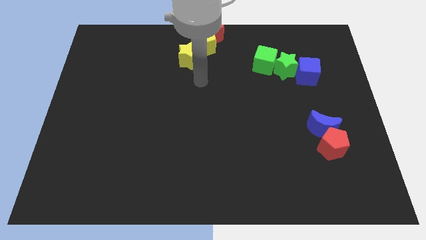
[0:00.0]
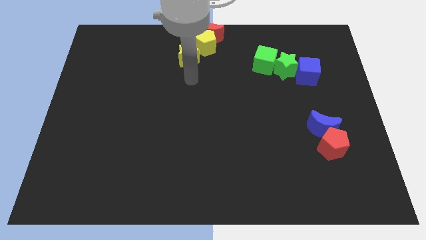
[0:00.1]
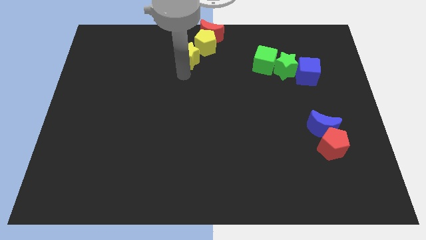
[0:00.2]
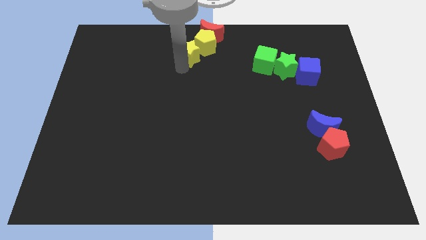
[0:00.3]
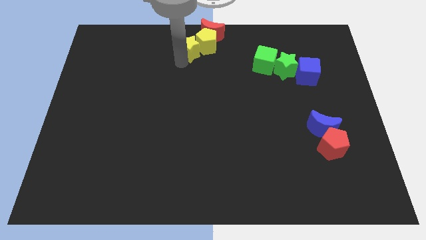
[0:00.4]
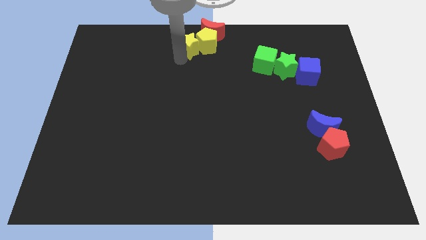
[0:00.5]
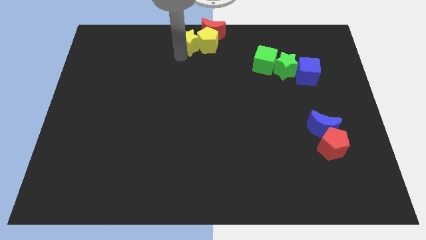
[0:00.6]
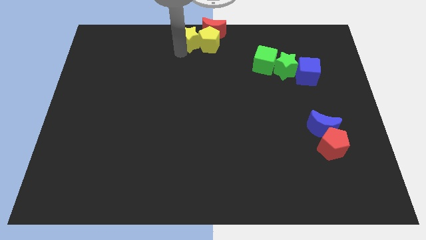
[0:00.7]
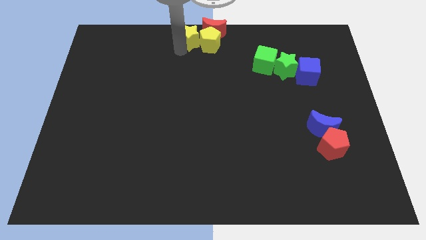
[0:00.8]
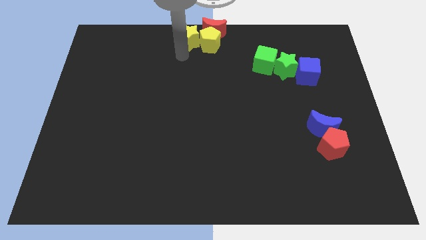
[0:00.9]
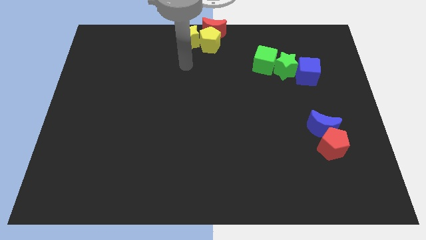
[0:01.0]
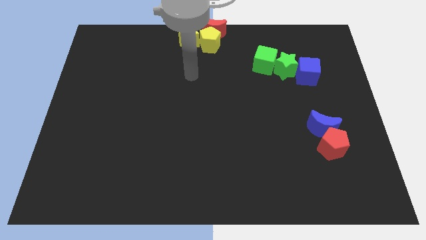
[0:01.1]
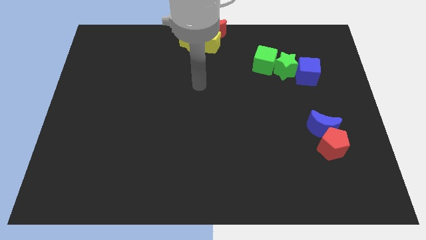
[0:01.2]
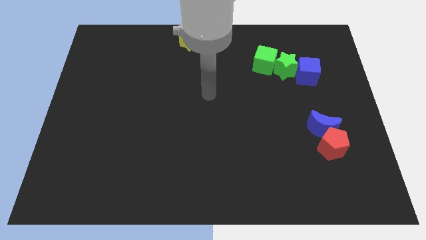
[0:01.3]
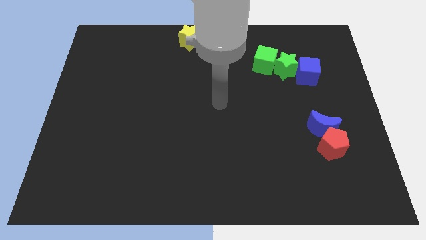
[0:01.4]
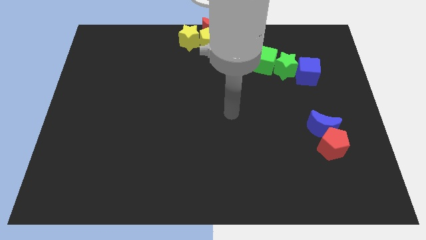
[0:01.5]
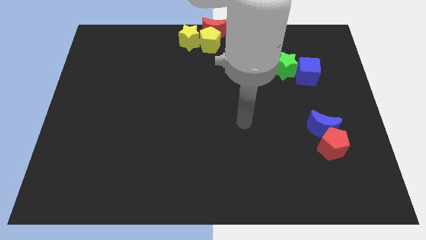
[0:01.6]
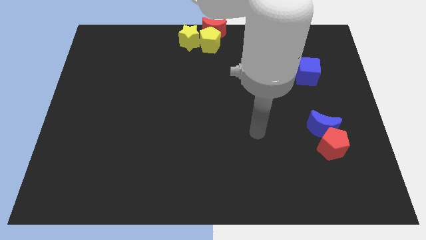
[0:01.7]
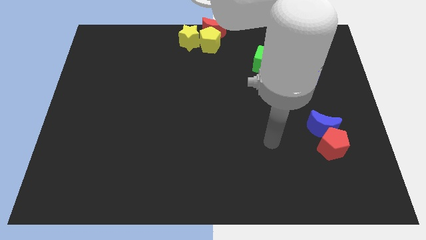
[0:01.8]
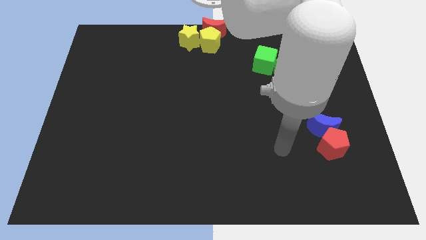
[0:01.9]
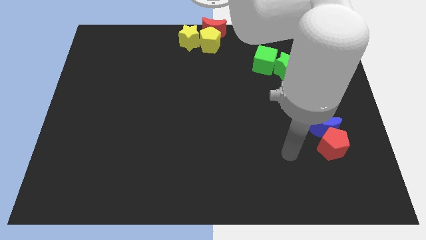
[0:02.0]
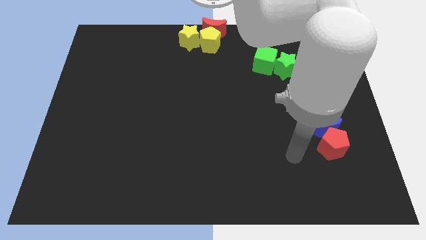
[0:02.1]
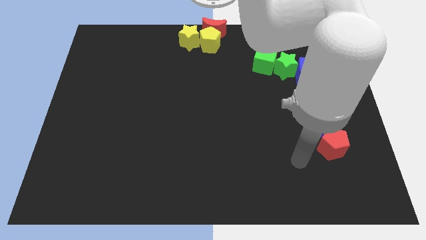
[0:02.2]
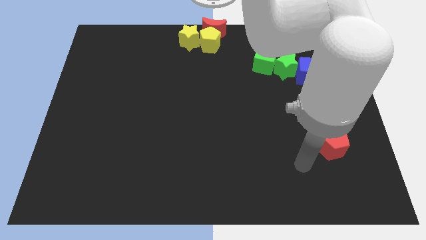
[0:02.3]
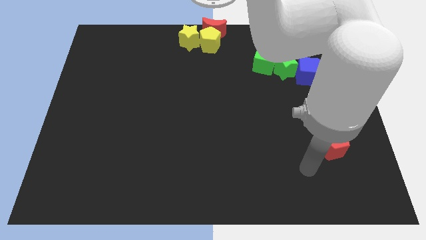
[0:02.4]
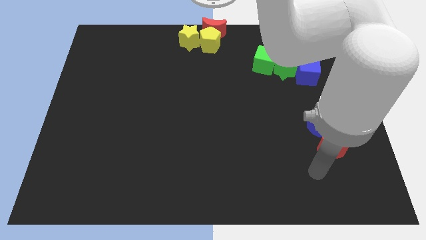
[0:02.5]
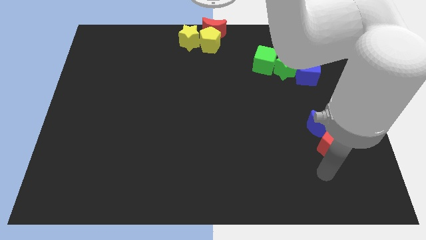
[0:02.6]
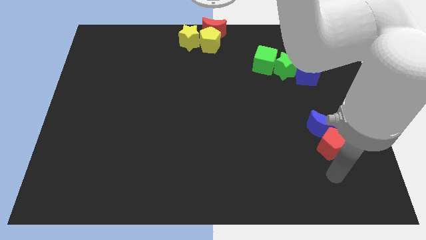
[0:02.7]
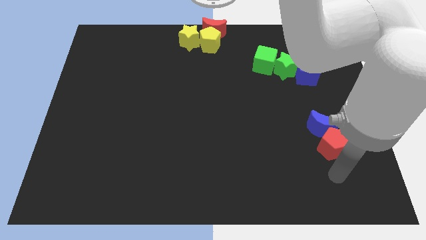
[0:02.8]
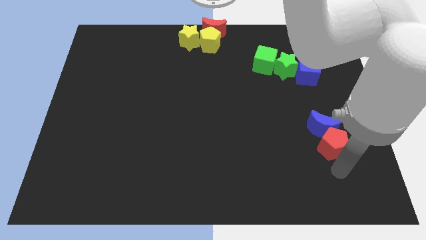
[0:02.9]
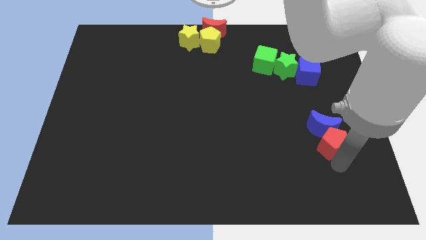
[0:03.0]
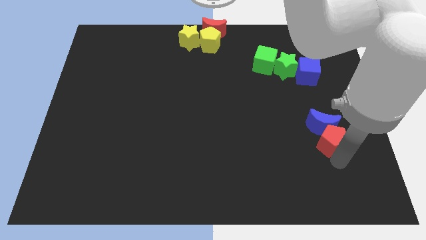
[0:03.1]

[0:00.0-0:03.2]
push the yellow star to the left of the yellow pentagon

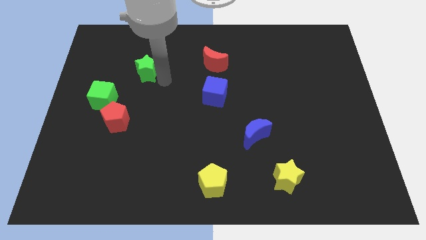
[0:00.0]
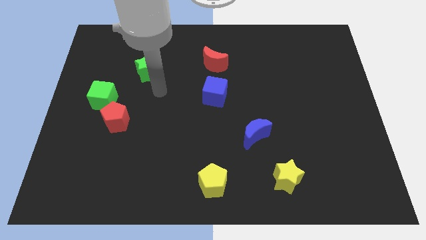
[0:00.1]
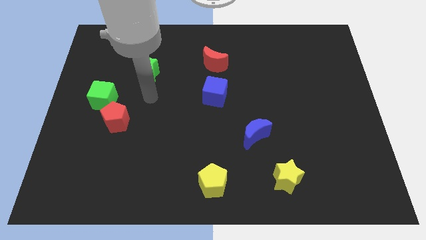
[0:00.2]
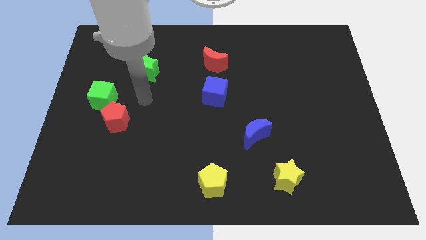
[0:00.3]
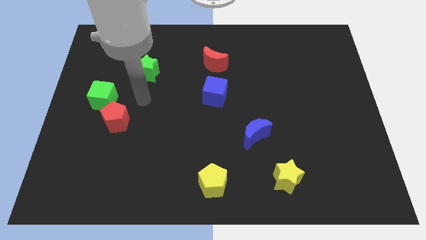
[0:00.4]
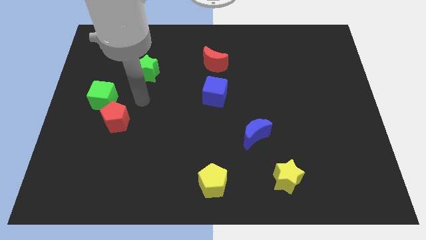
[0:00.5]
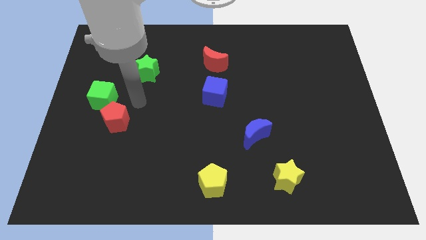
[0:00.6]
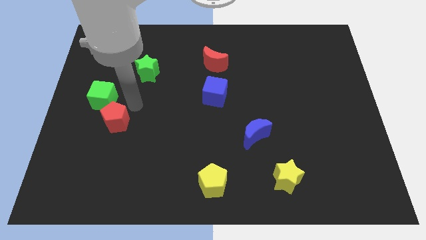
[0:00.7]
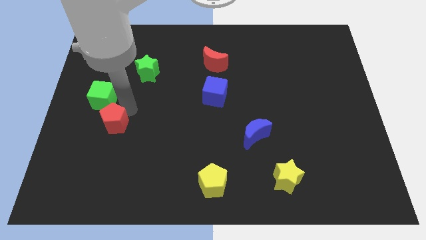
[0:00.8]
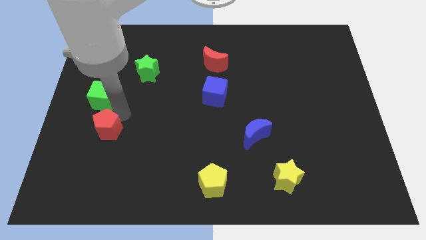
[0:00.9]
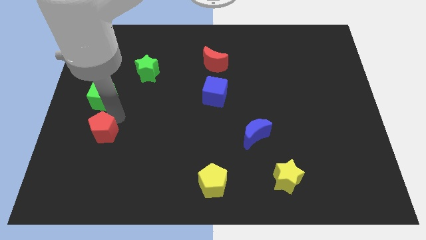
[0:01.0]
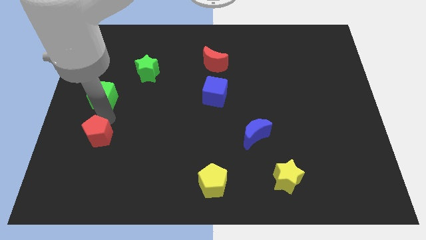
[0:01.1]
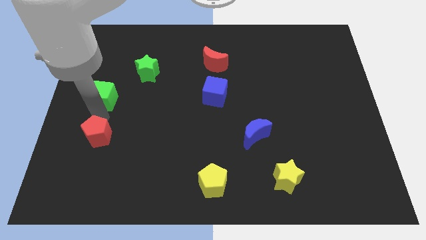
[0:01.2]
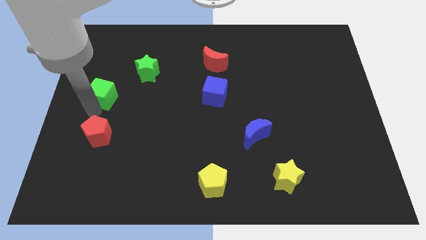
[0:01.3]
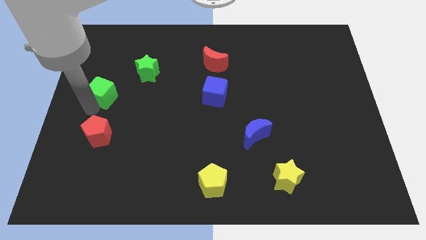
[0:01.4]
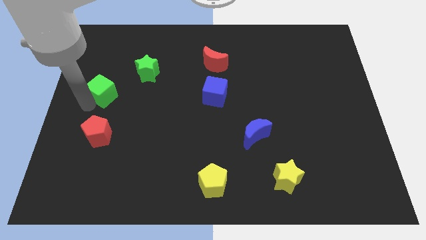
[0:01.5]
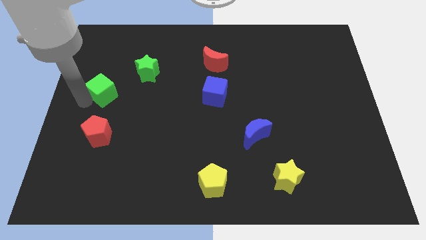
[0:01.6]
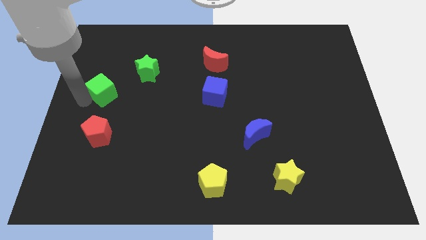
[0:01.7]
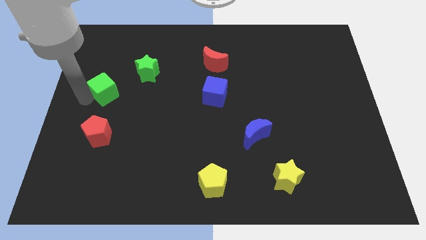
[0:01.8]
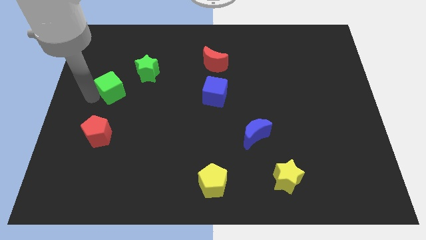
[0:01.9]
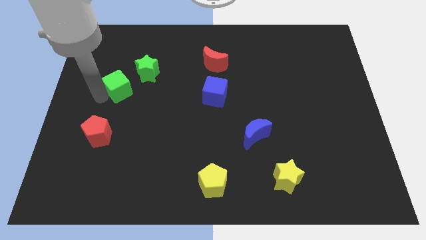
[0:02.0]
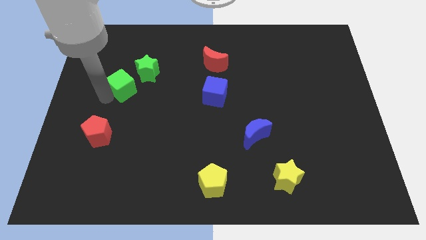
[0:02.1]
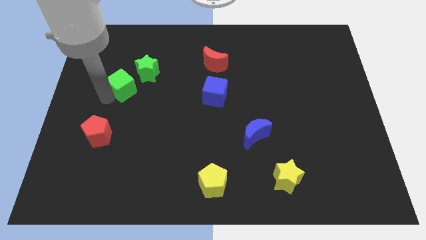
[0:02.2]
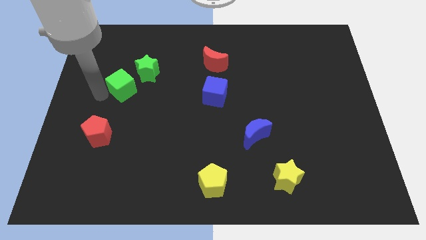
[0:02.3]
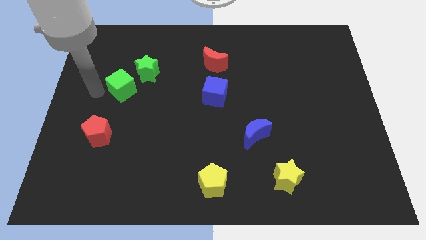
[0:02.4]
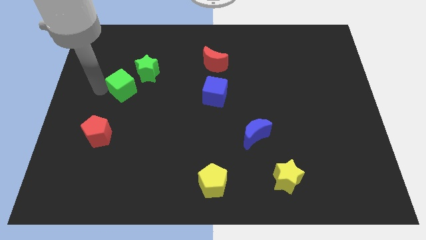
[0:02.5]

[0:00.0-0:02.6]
separate the red pentagon from the green cube

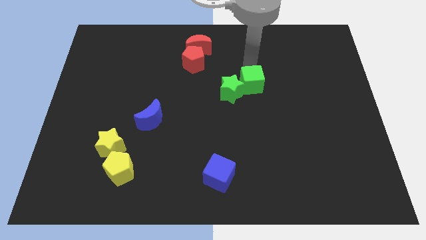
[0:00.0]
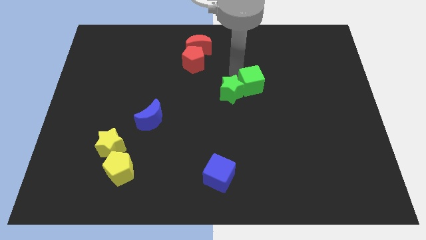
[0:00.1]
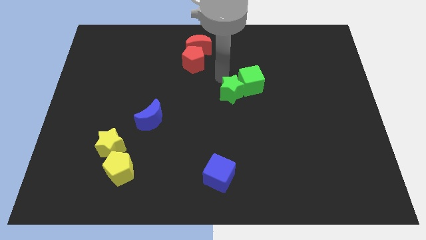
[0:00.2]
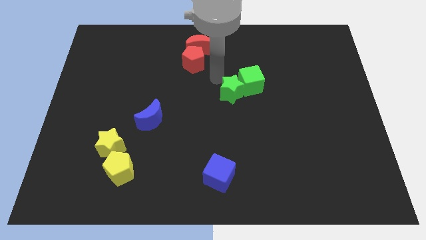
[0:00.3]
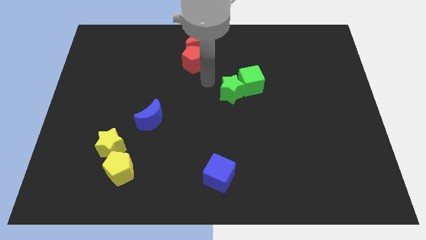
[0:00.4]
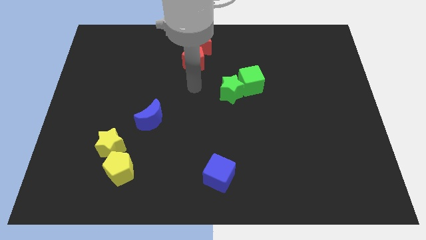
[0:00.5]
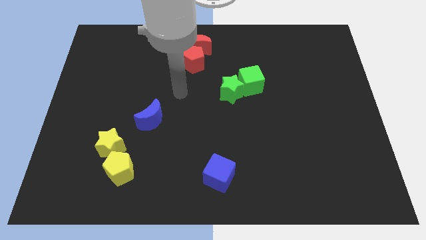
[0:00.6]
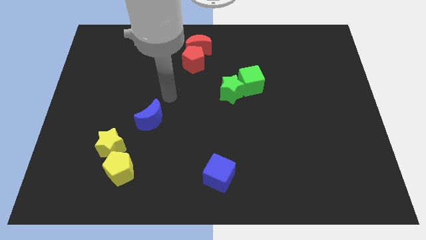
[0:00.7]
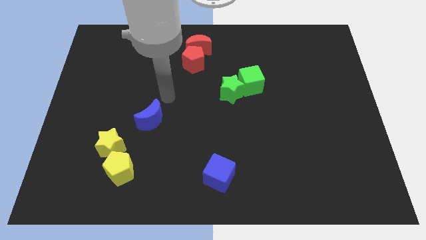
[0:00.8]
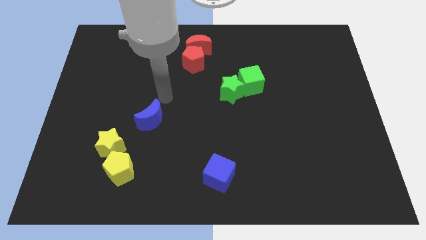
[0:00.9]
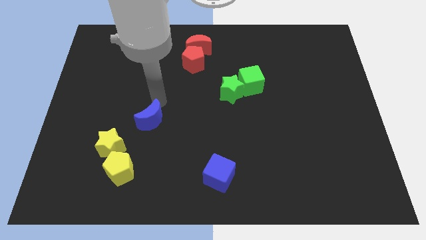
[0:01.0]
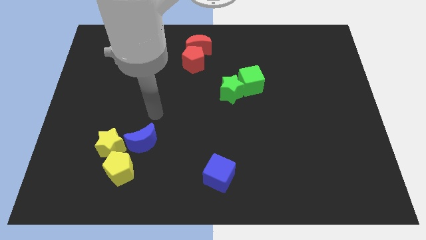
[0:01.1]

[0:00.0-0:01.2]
move the hand on the top of the blue crescent

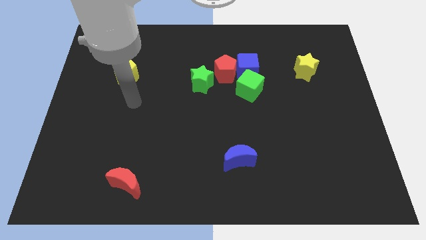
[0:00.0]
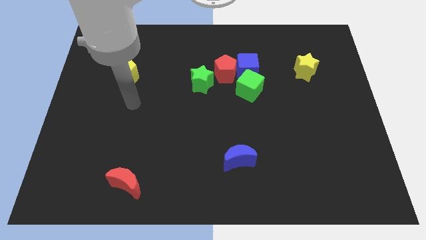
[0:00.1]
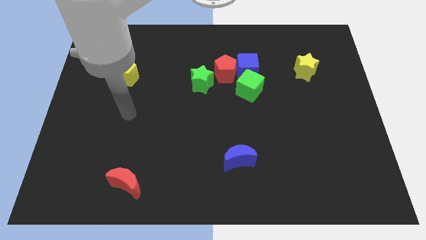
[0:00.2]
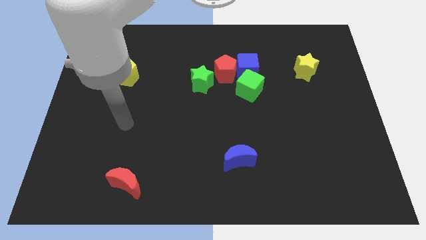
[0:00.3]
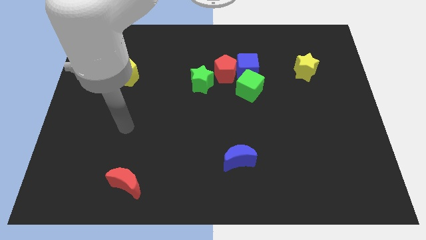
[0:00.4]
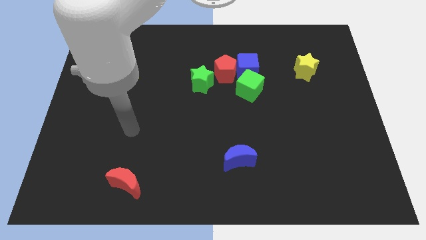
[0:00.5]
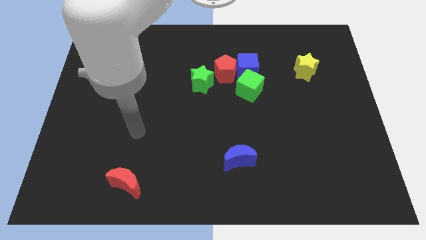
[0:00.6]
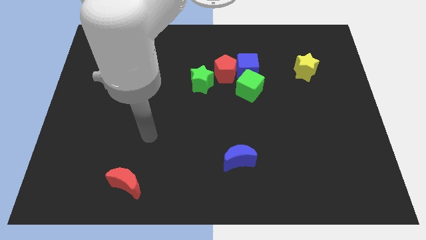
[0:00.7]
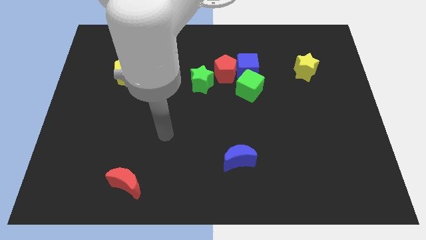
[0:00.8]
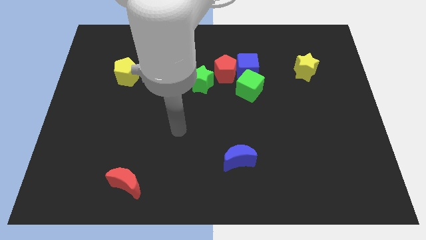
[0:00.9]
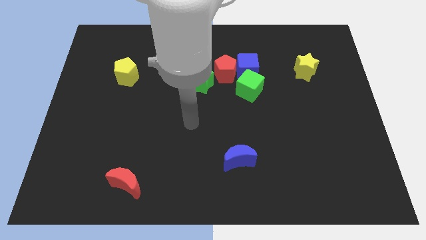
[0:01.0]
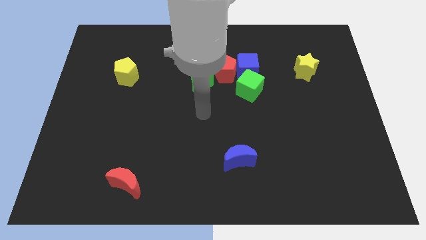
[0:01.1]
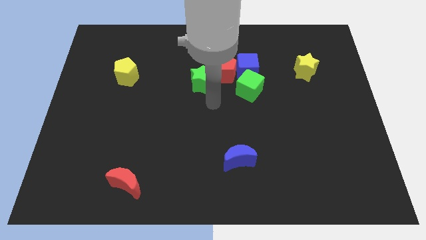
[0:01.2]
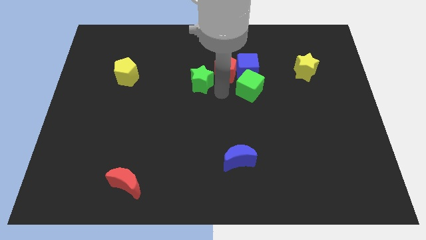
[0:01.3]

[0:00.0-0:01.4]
point your arm at the bottom of the red pentagon

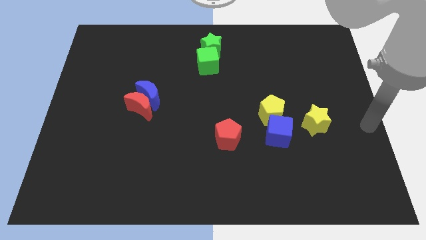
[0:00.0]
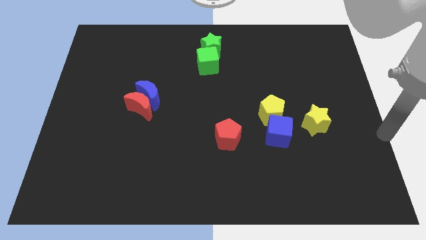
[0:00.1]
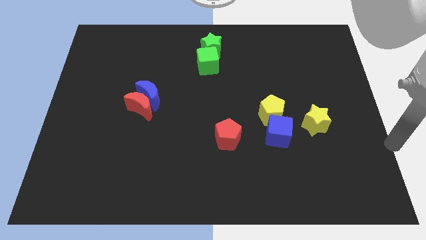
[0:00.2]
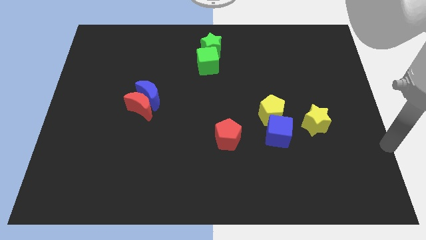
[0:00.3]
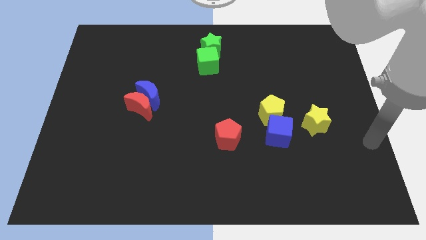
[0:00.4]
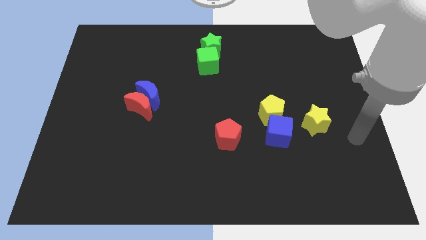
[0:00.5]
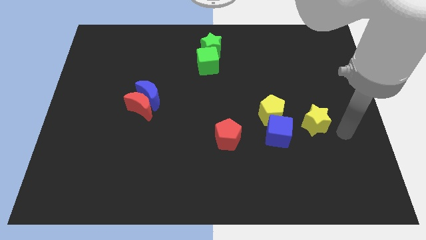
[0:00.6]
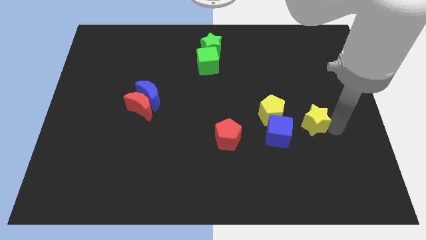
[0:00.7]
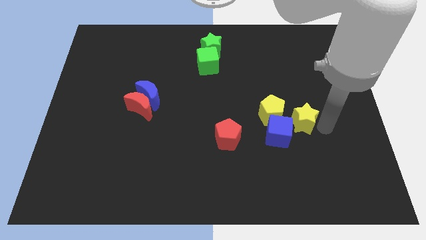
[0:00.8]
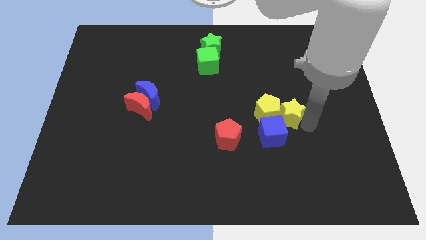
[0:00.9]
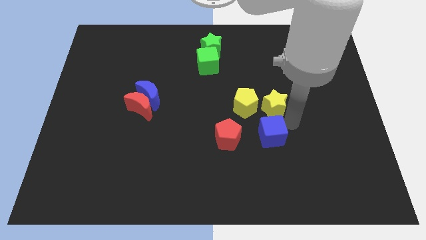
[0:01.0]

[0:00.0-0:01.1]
move the yellow star close to the yellow pentagon
